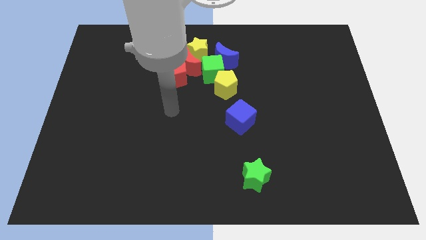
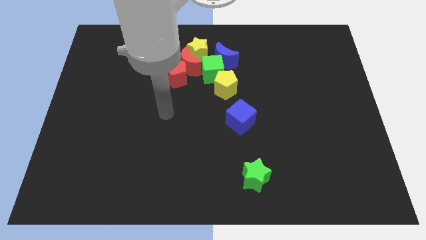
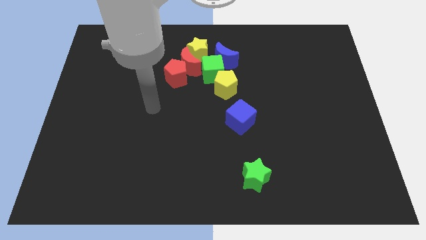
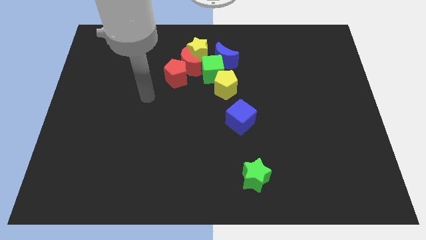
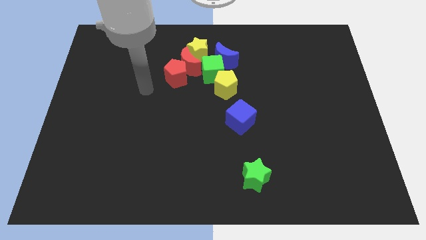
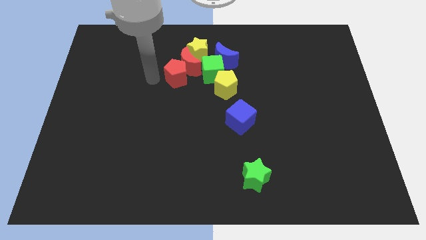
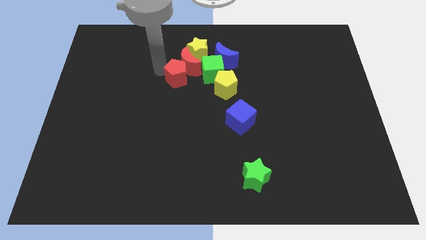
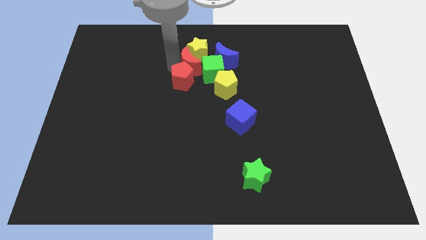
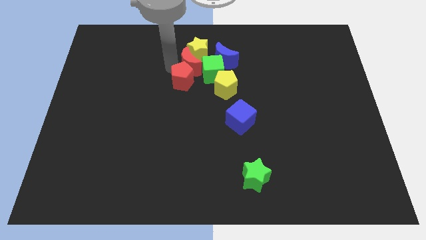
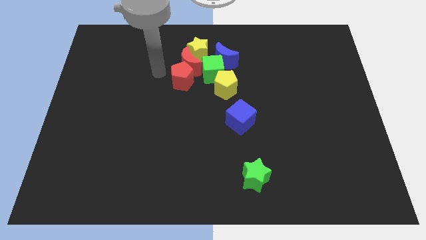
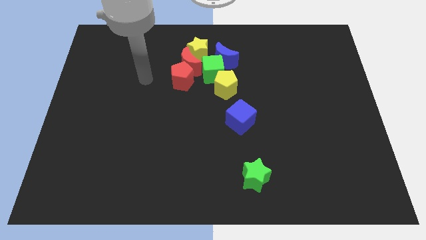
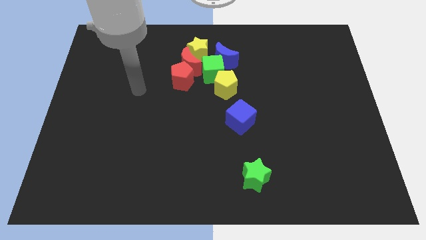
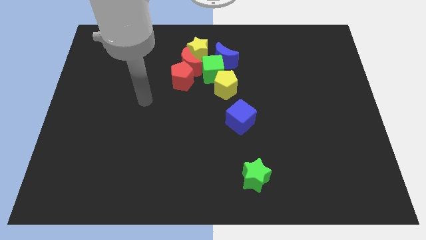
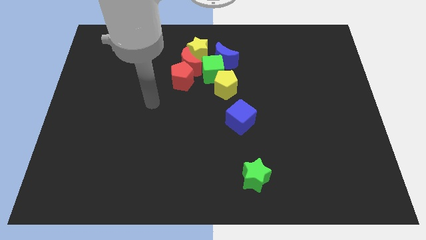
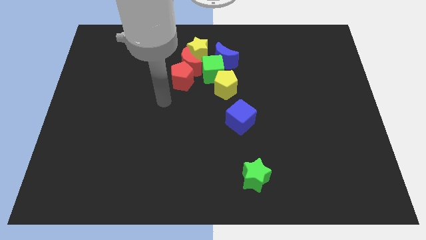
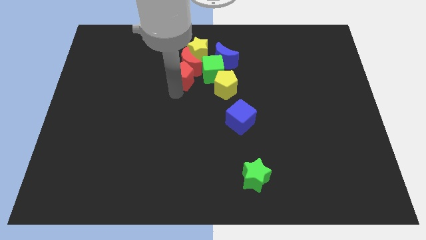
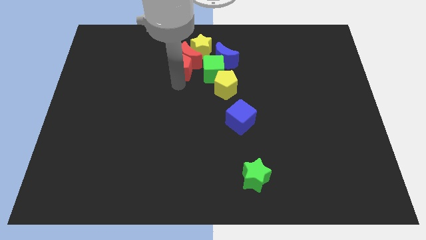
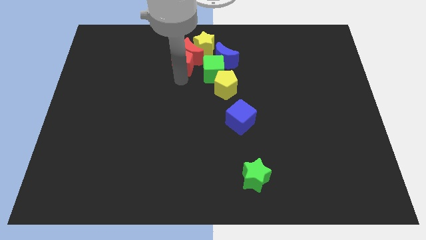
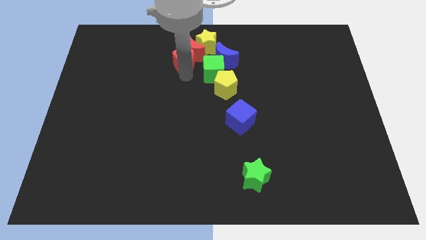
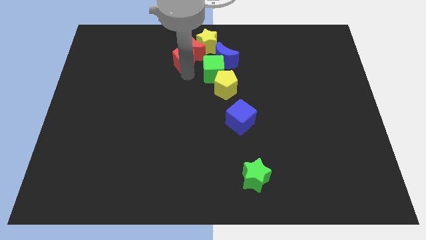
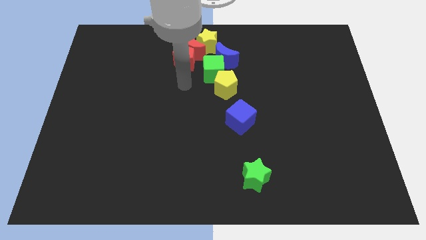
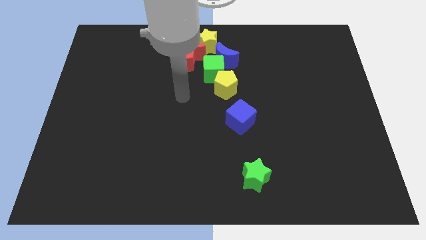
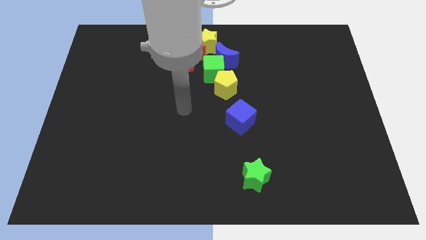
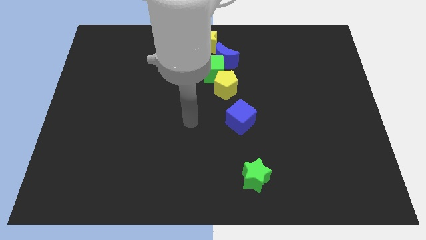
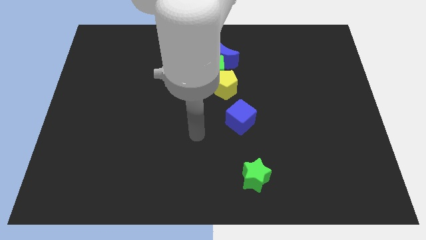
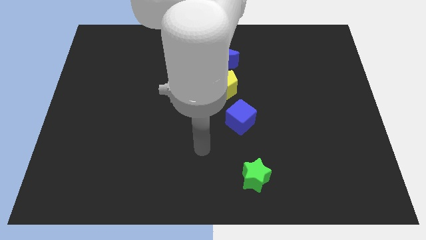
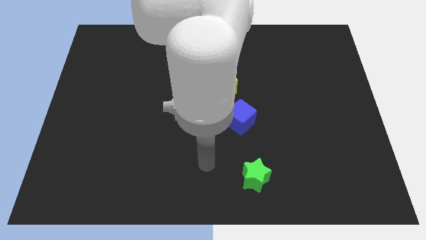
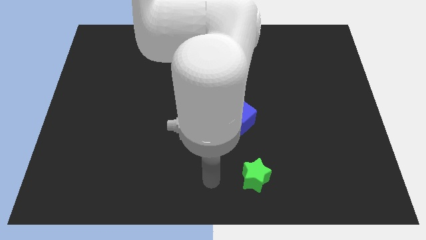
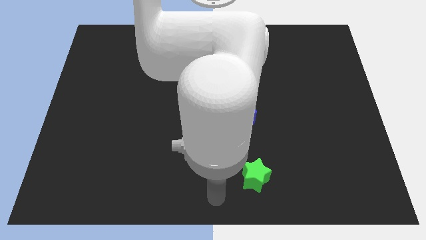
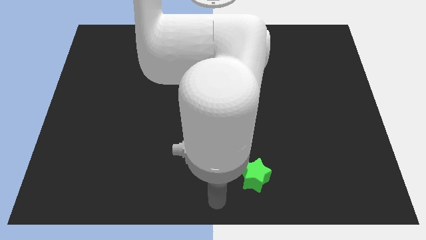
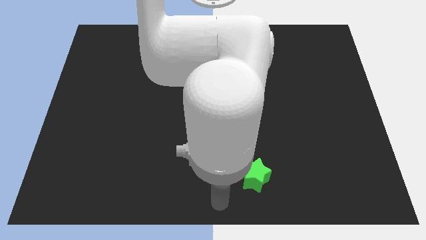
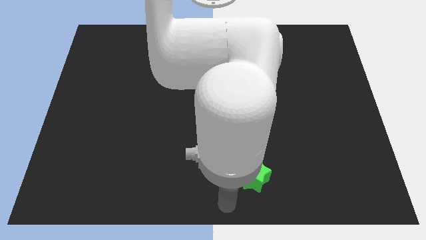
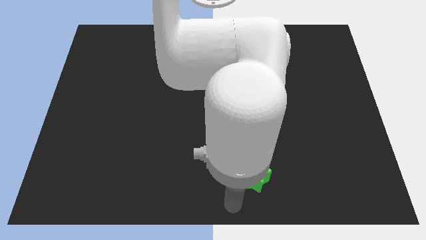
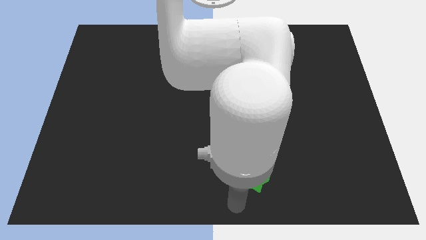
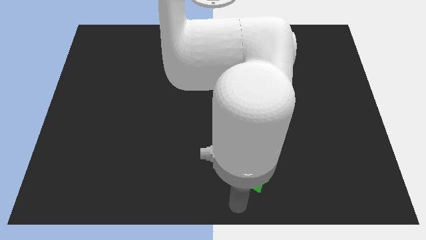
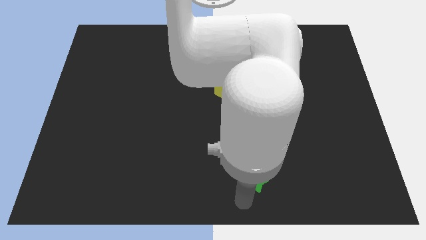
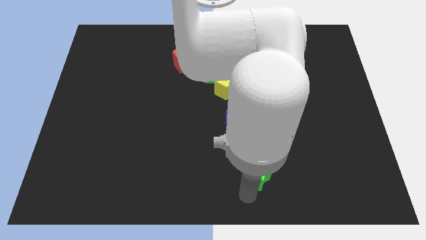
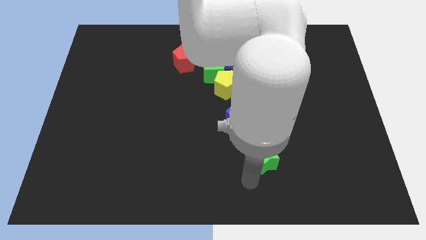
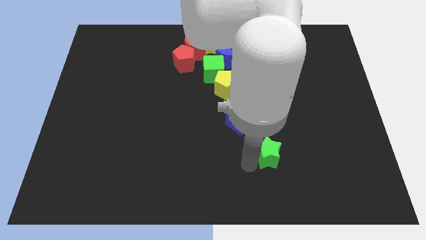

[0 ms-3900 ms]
push the red pentagon into the red crescent

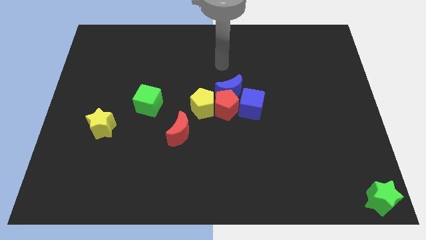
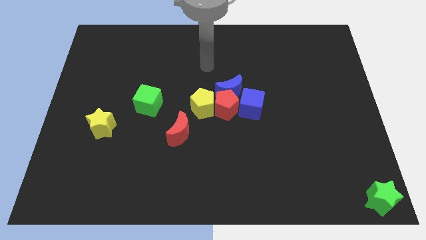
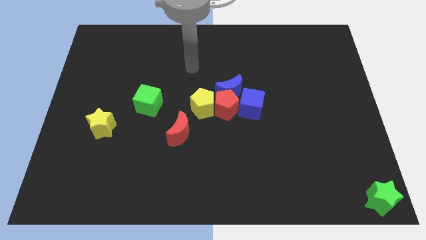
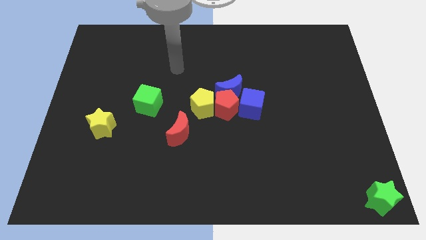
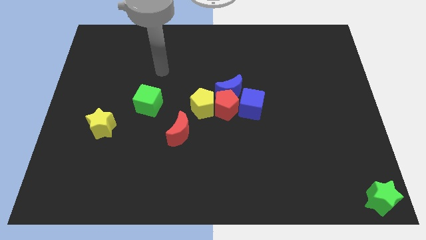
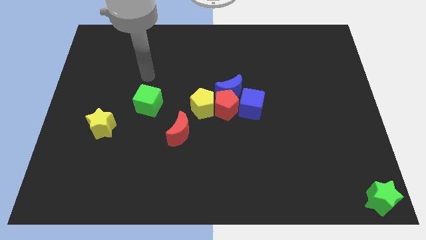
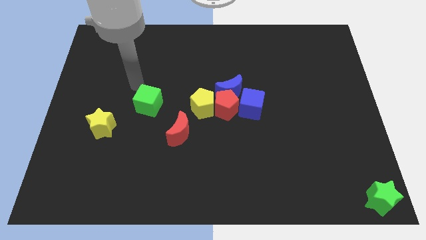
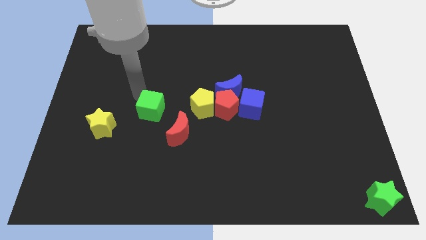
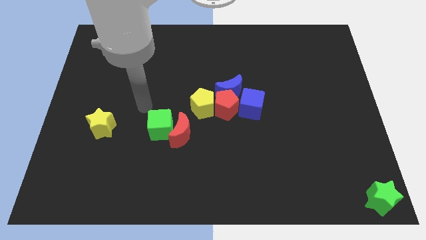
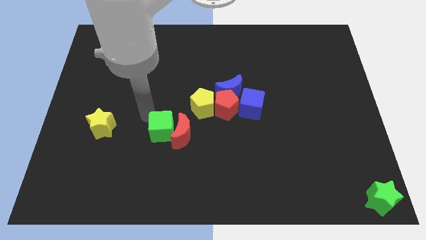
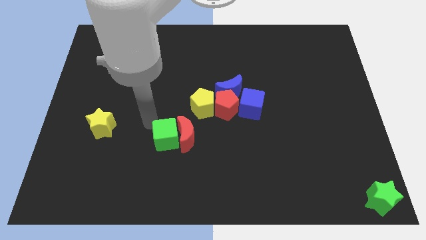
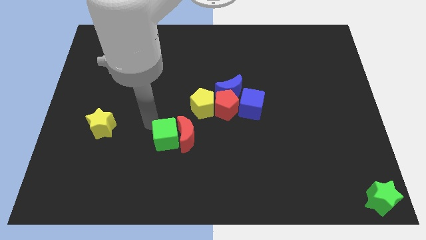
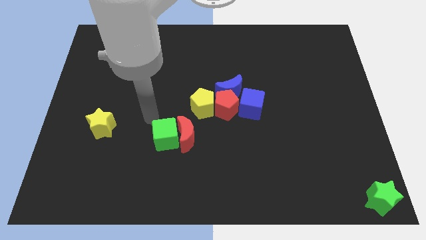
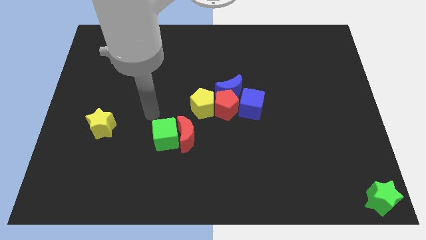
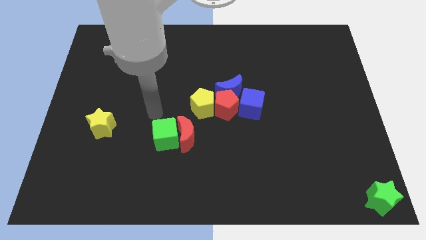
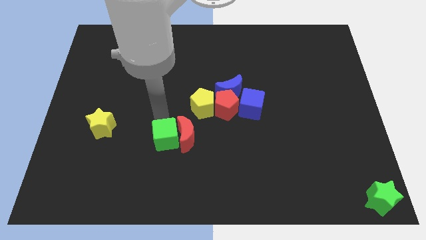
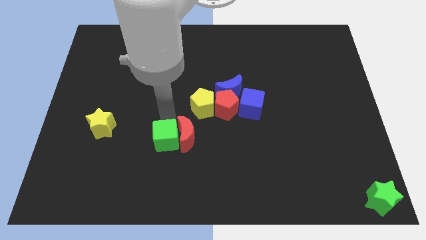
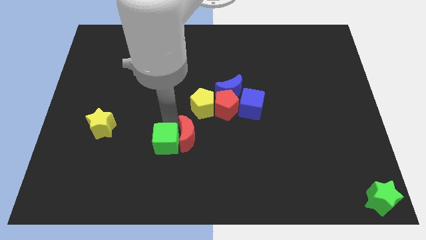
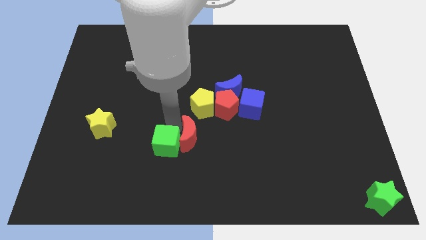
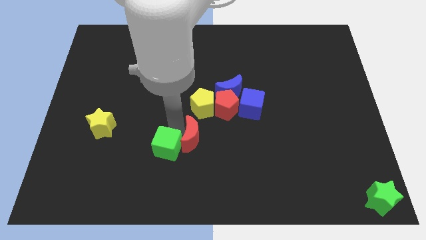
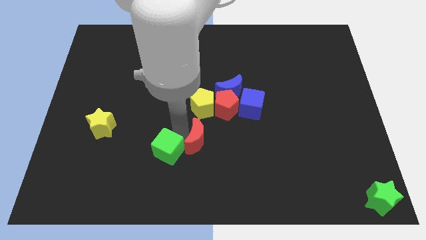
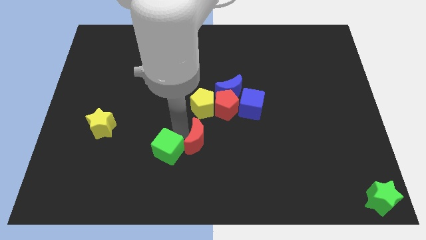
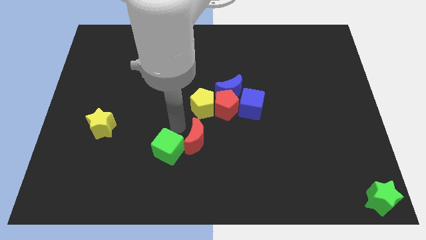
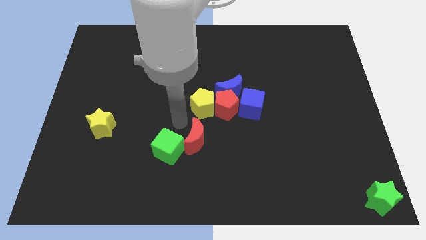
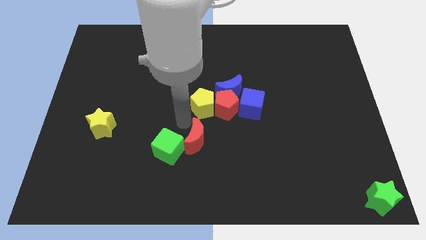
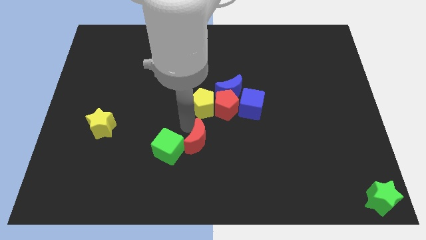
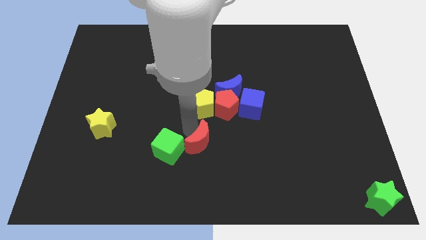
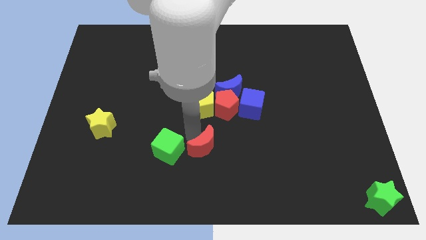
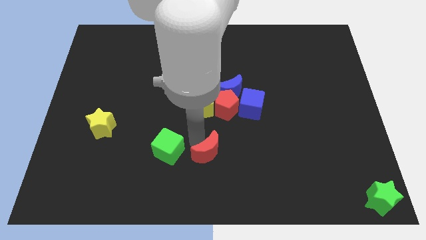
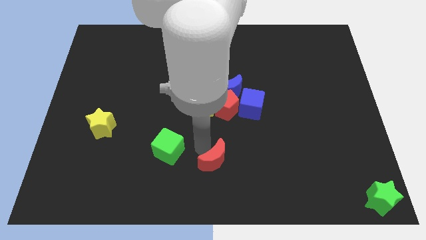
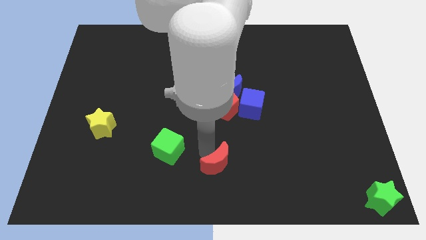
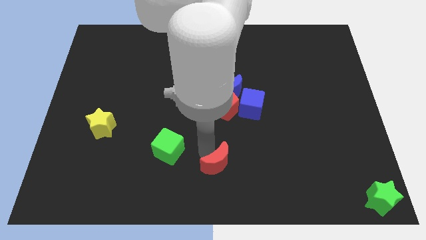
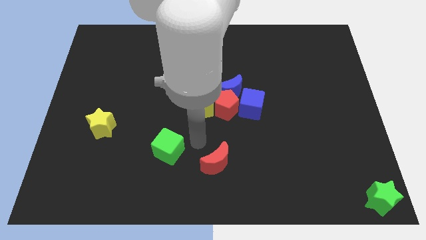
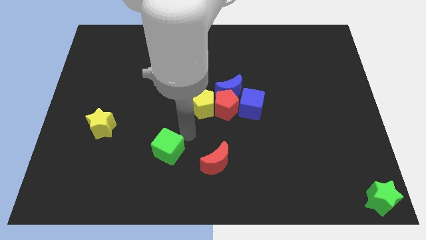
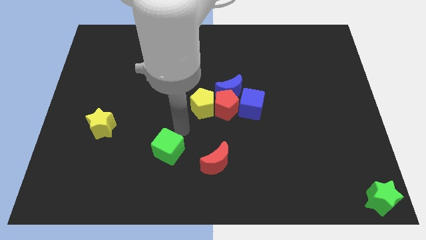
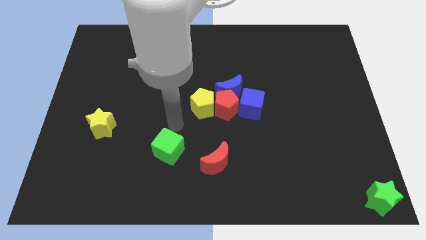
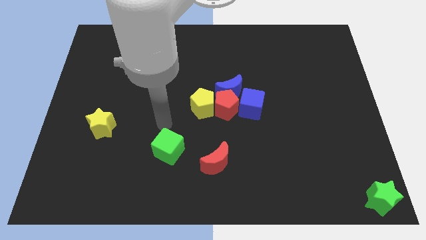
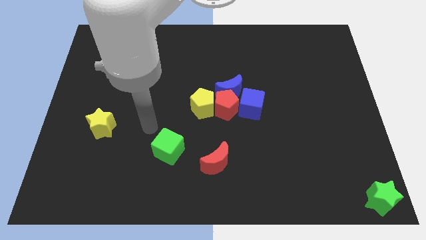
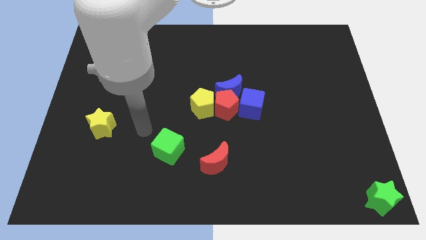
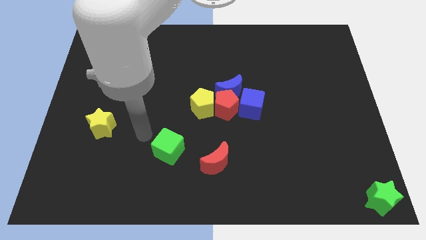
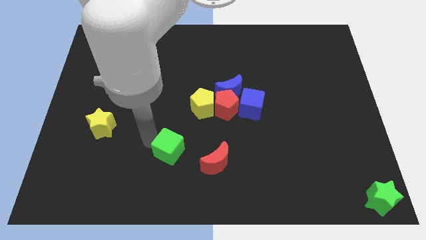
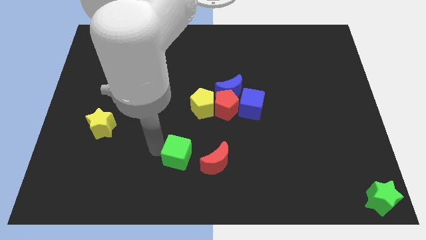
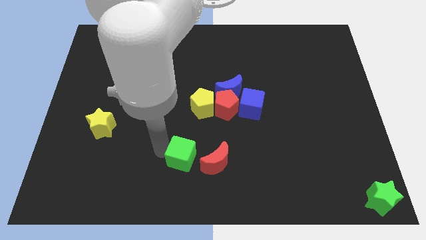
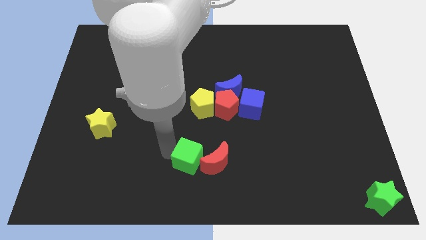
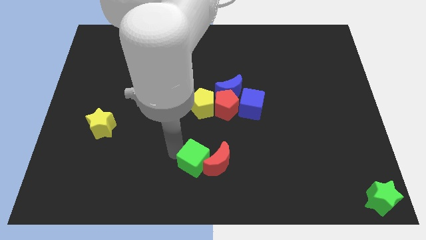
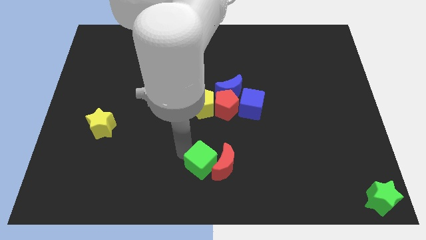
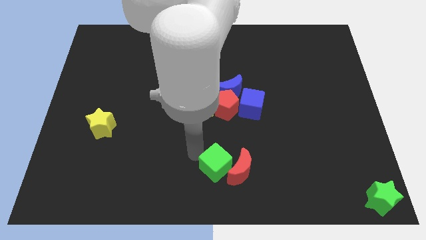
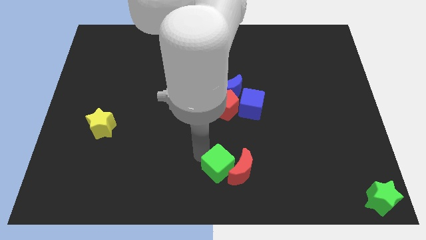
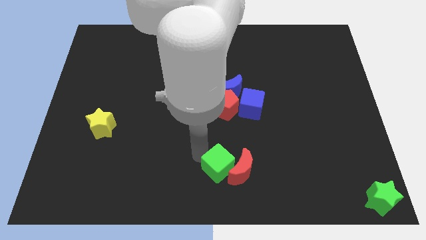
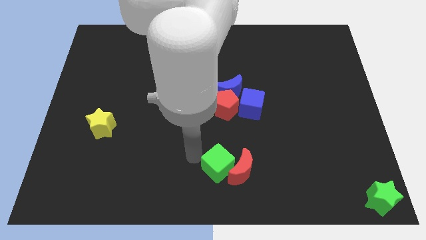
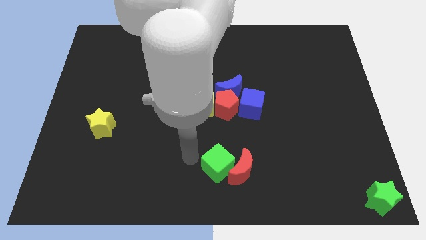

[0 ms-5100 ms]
slide the green cube into the red crescent
